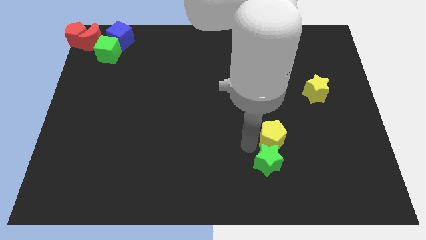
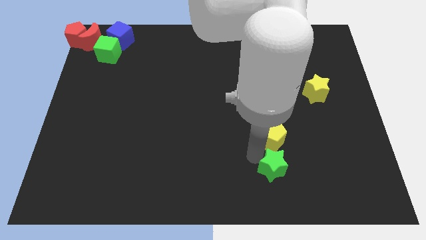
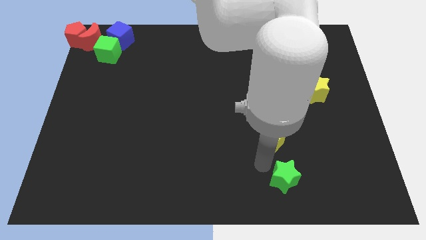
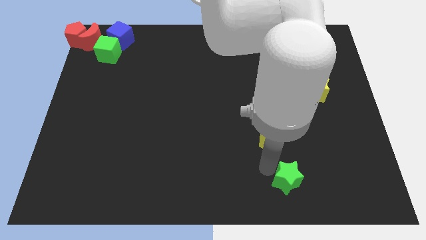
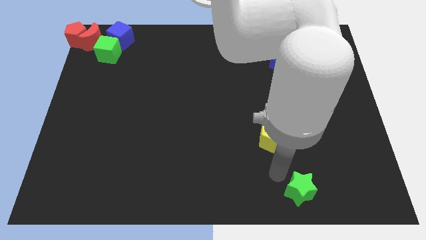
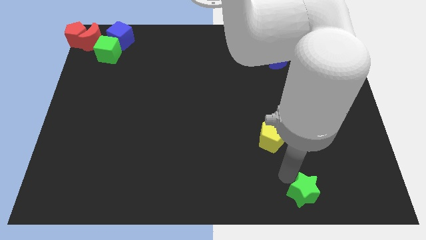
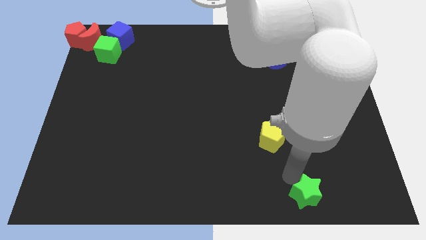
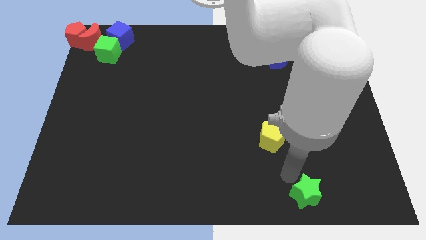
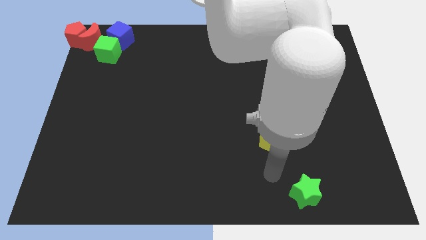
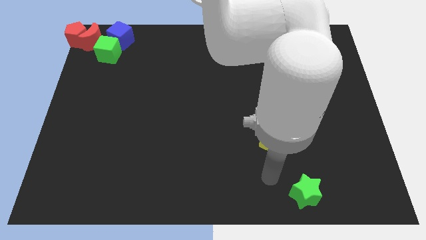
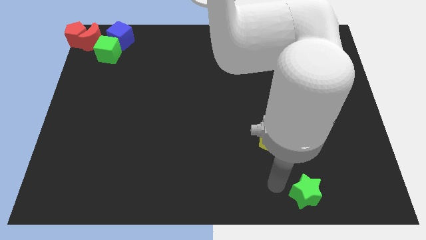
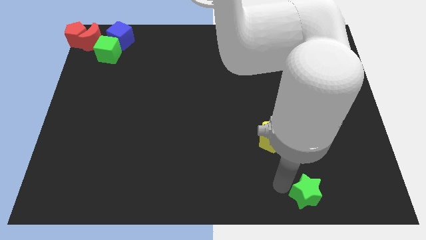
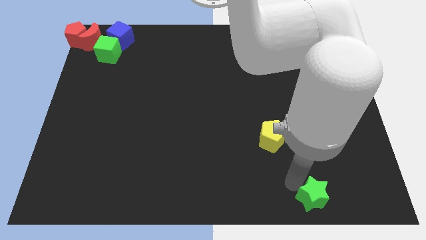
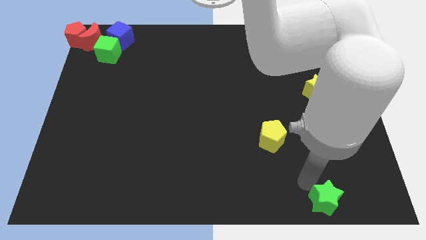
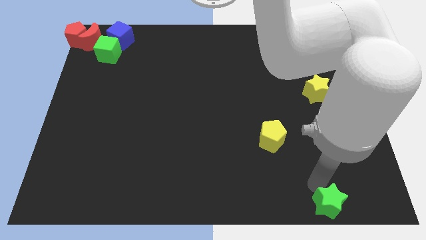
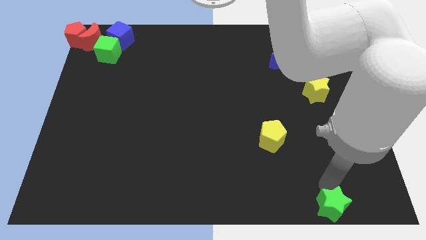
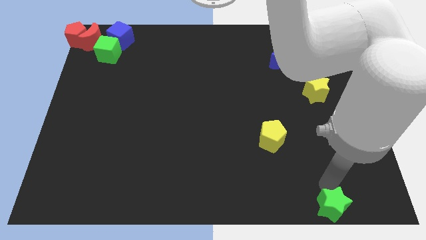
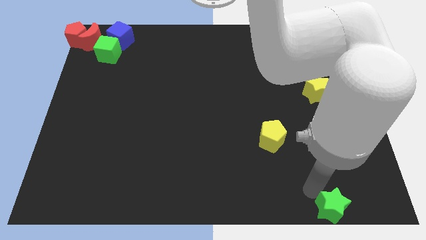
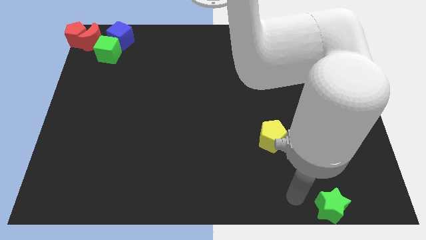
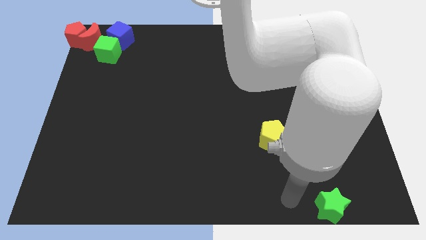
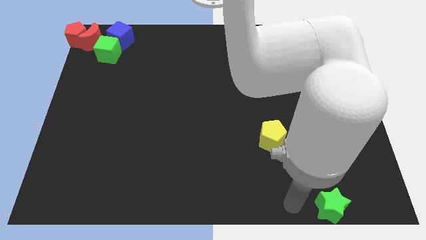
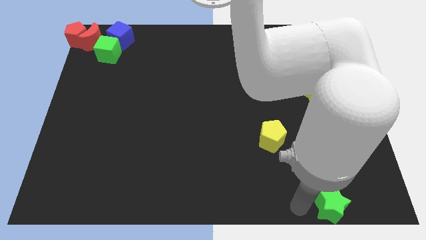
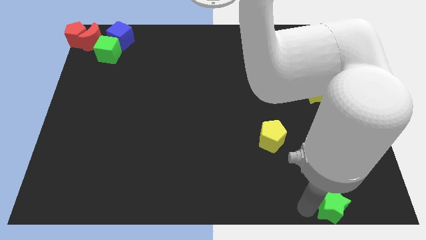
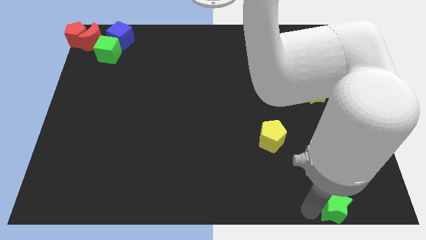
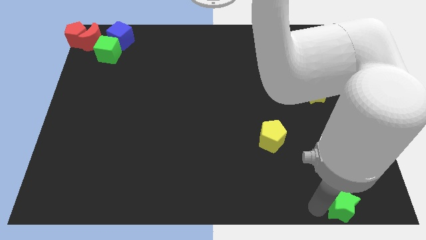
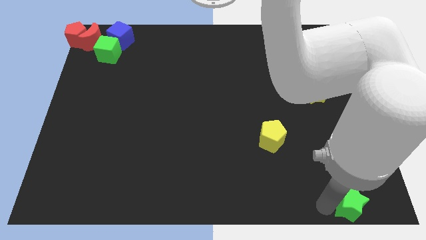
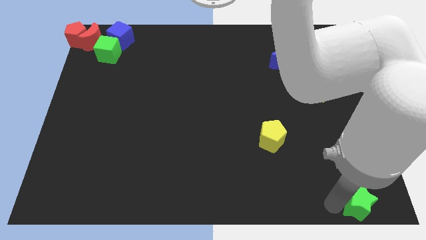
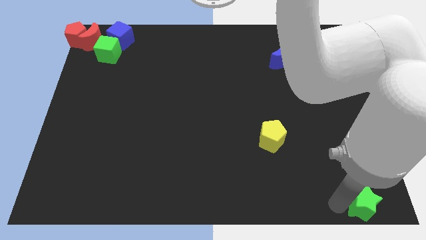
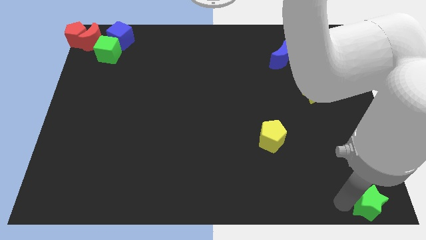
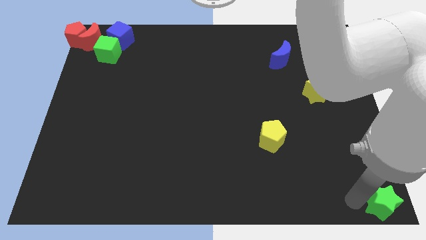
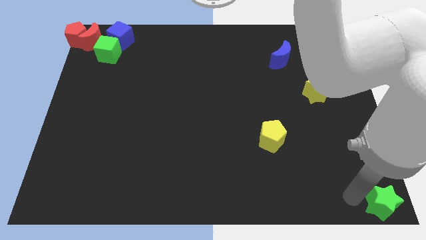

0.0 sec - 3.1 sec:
place the green star in the bottom right

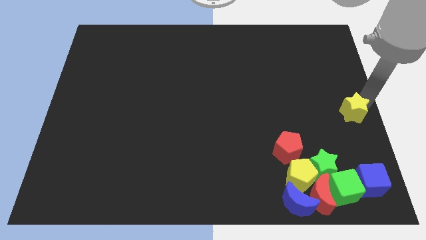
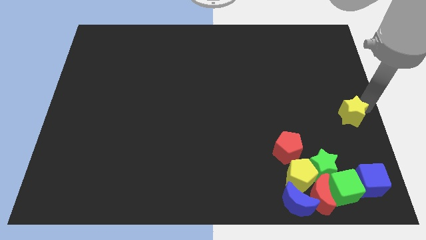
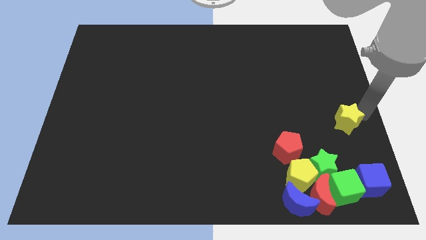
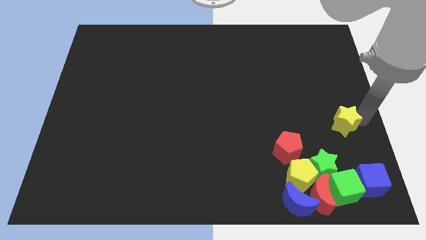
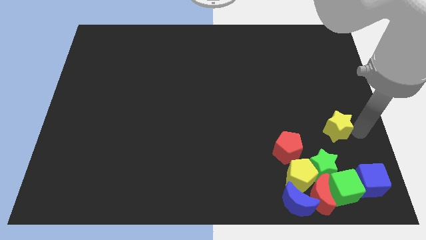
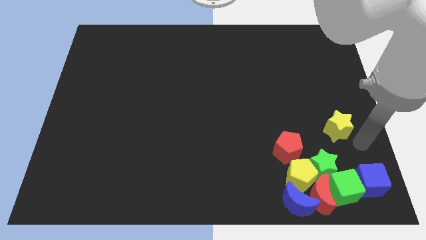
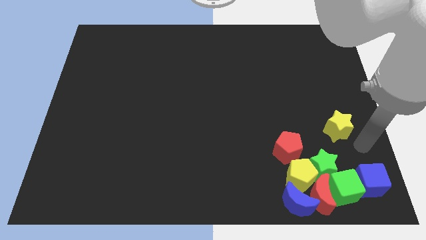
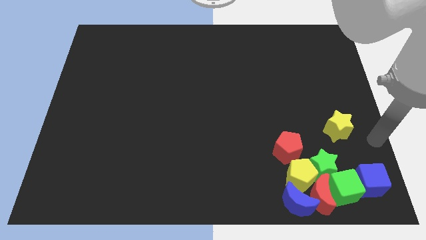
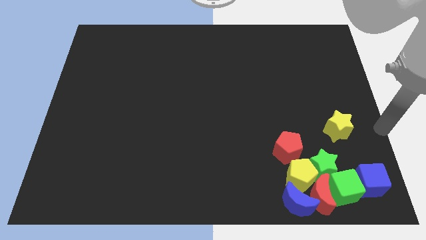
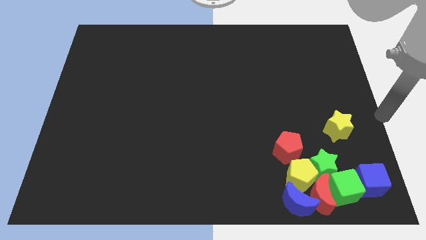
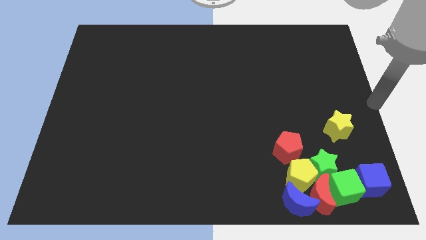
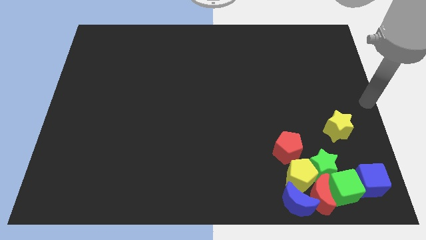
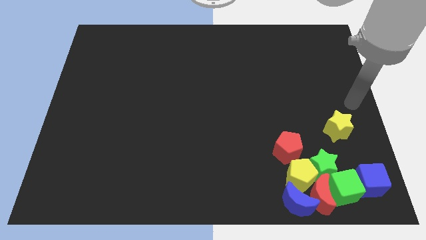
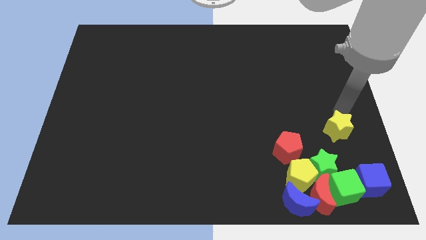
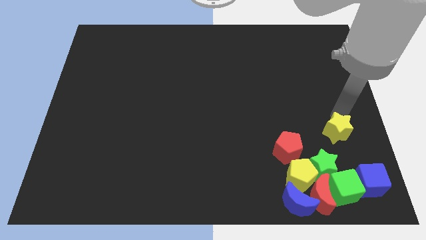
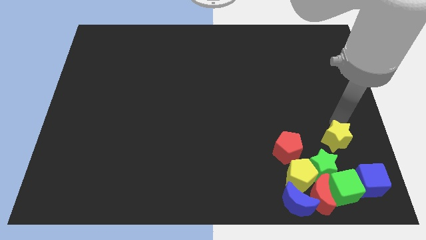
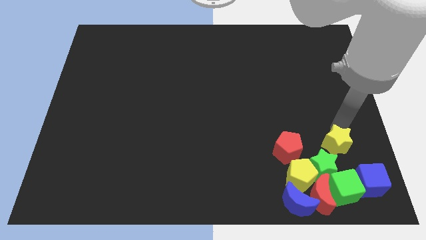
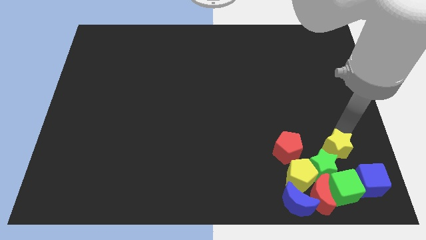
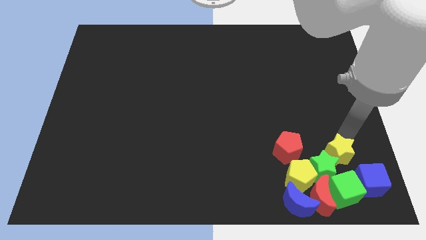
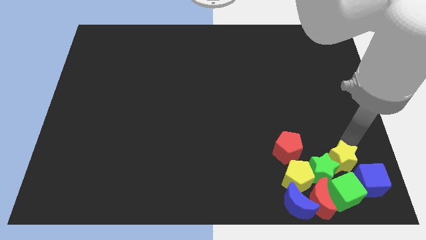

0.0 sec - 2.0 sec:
push the yellow star to the top right of the green star

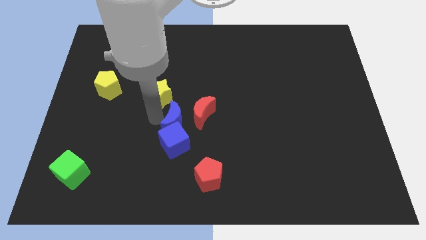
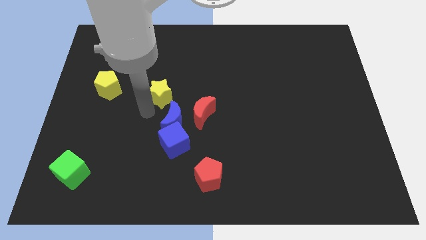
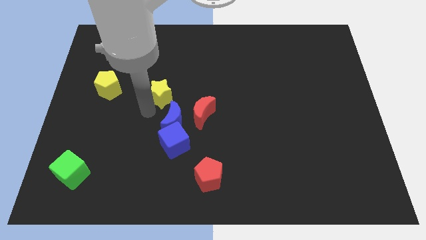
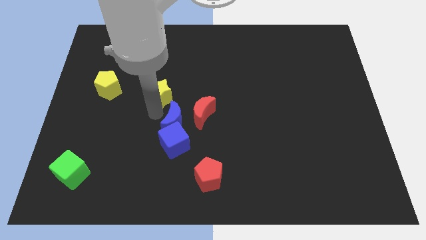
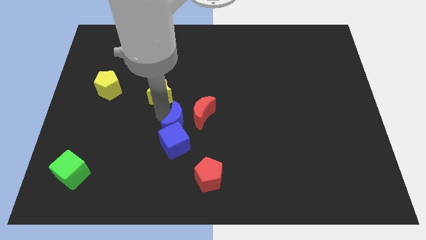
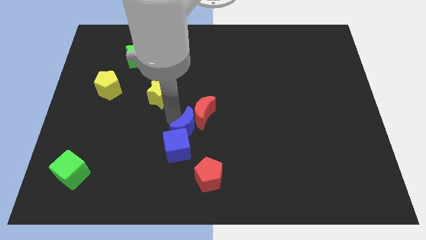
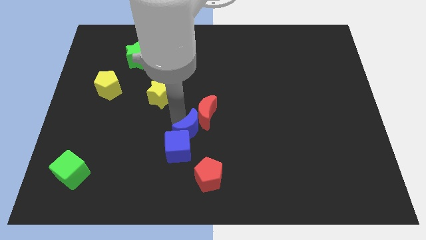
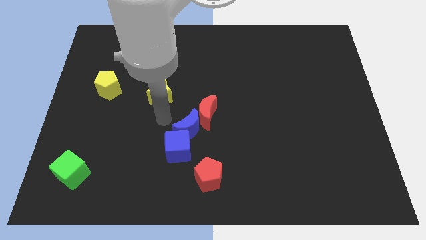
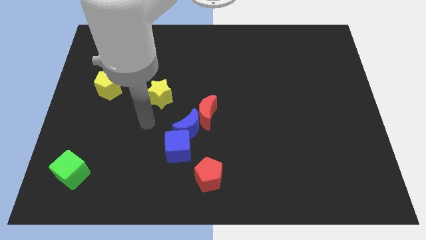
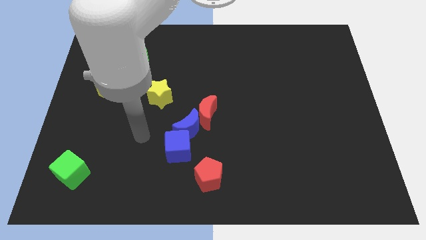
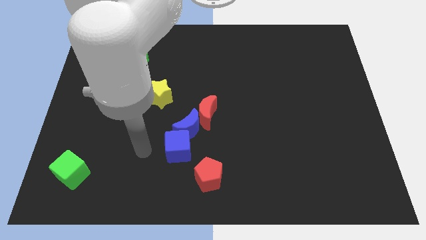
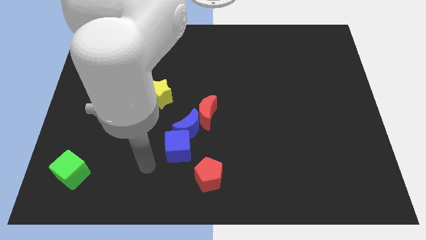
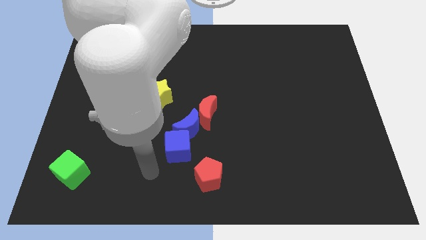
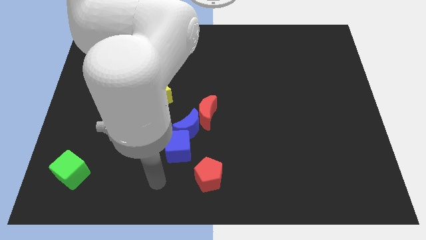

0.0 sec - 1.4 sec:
push the blue moon and red moon together

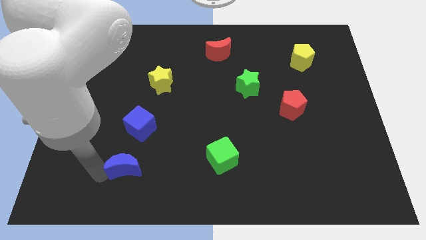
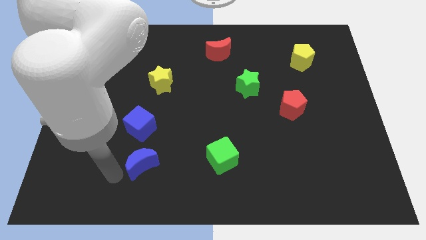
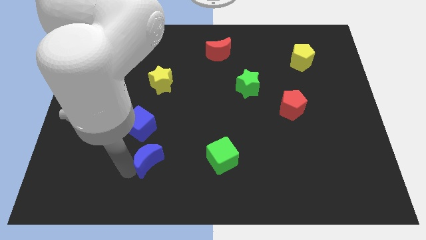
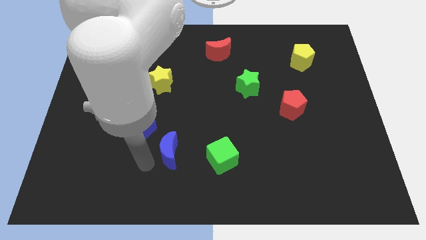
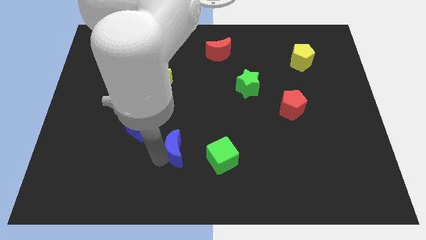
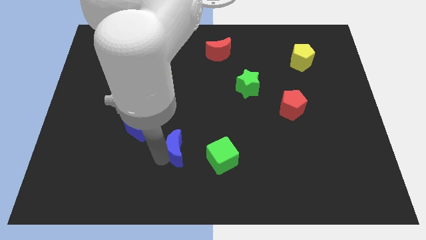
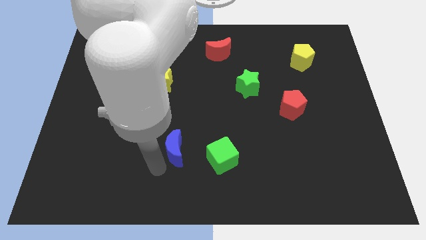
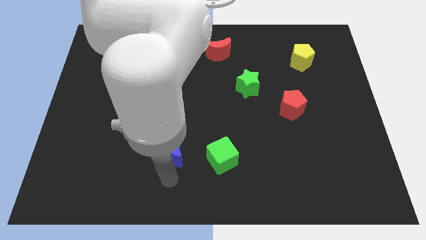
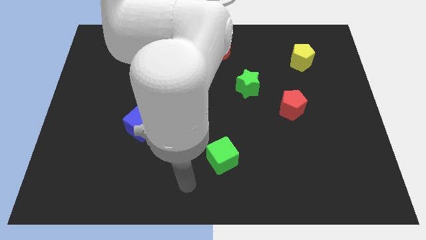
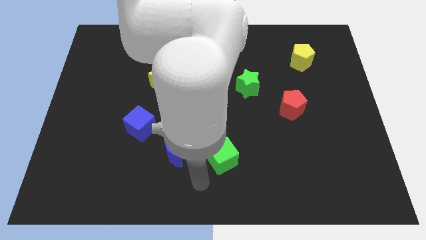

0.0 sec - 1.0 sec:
put the blue crescent diagonally in between the green cube and the blue cube

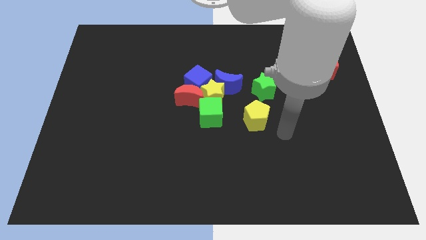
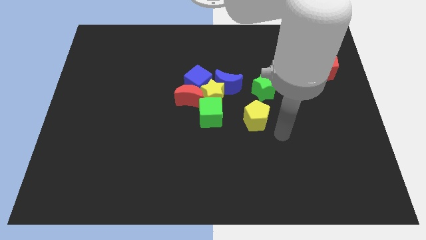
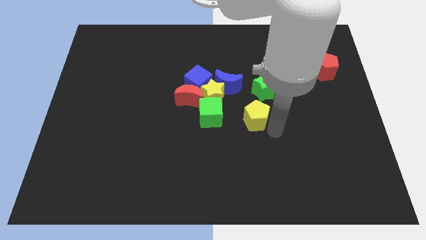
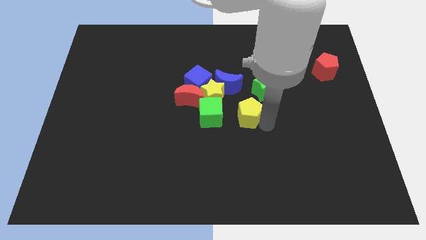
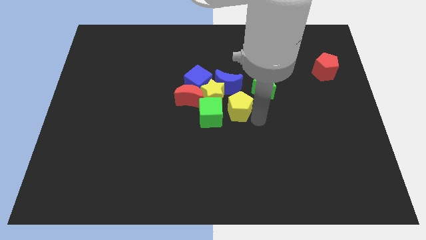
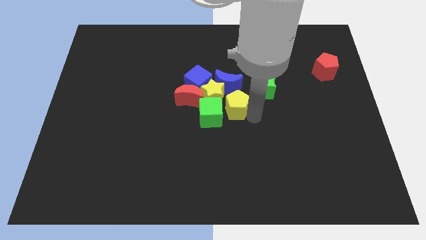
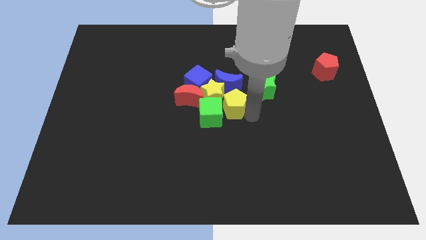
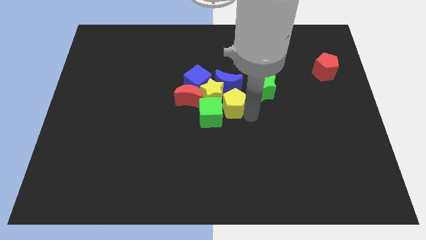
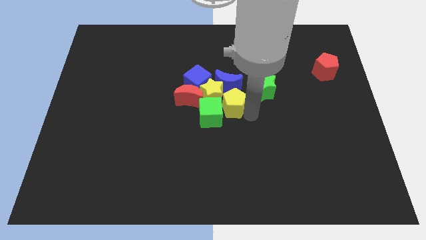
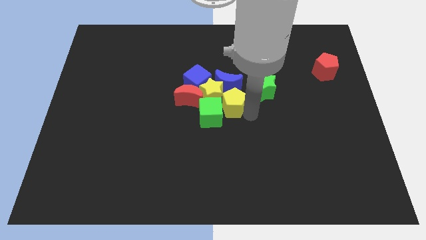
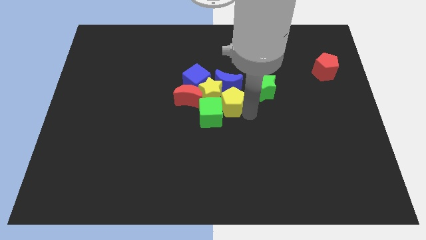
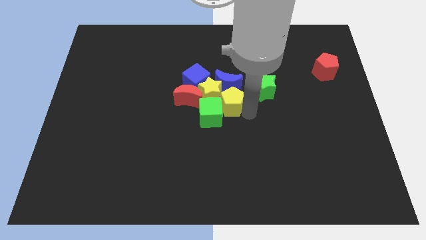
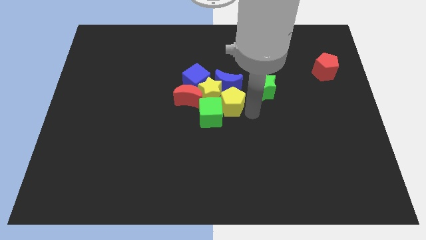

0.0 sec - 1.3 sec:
move the yellow pentagon into yellow star
